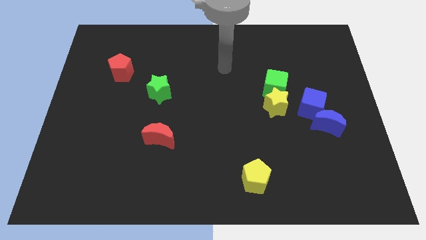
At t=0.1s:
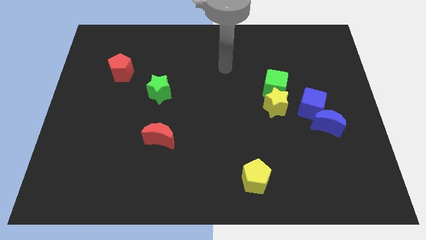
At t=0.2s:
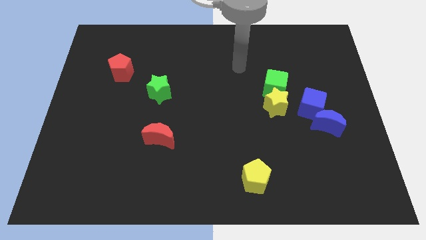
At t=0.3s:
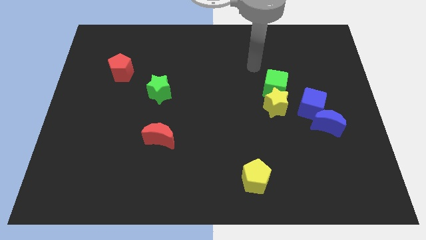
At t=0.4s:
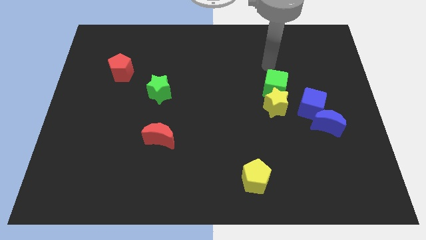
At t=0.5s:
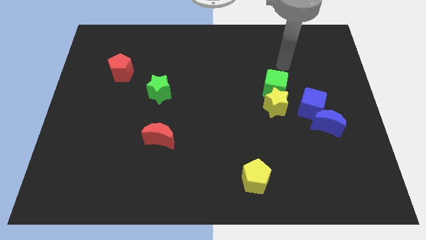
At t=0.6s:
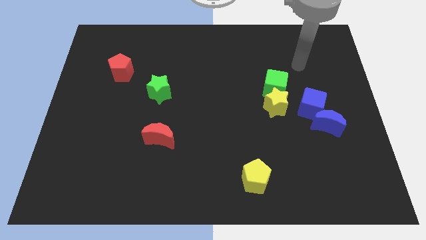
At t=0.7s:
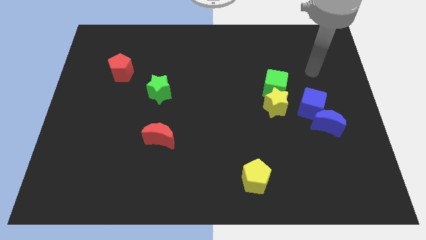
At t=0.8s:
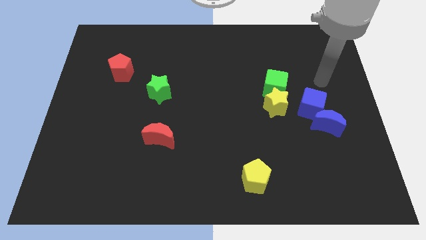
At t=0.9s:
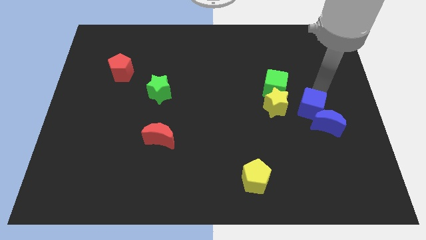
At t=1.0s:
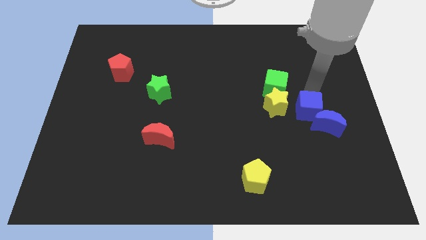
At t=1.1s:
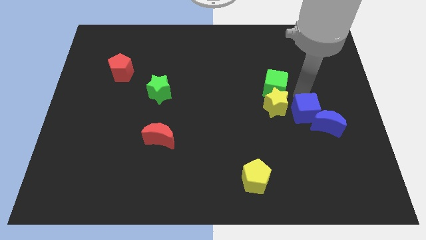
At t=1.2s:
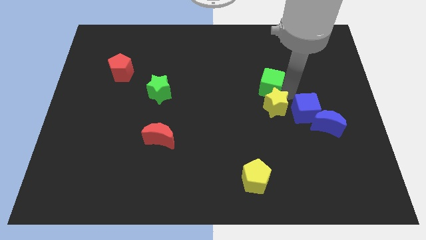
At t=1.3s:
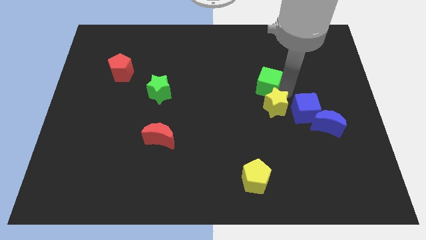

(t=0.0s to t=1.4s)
slightly push the blue cube

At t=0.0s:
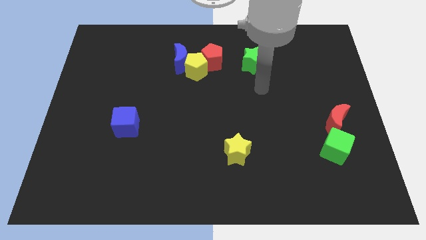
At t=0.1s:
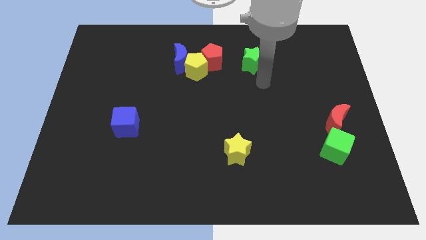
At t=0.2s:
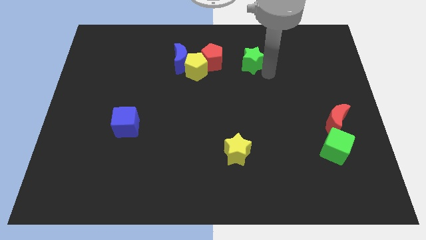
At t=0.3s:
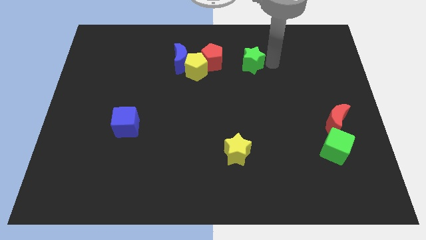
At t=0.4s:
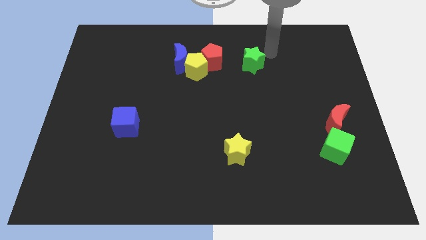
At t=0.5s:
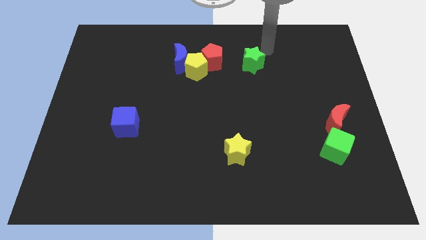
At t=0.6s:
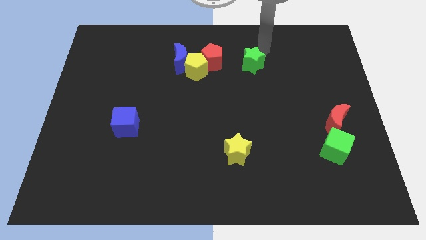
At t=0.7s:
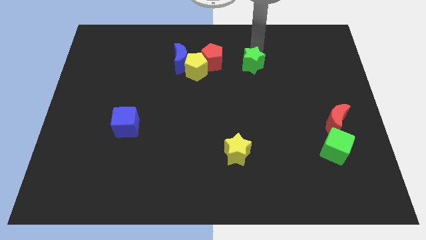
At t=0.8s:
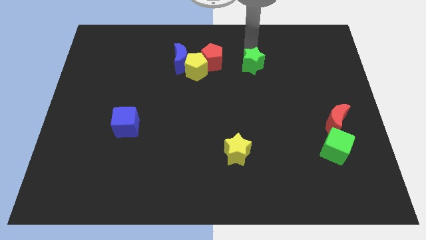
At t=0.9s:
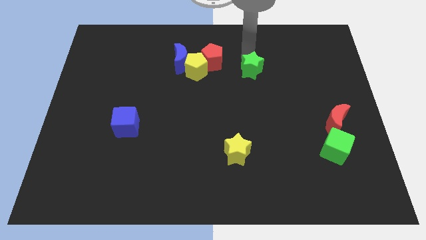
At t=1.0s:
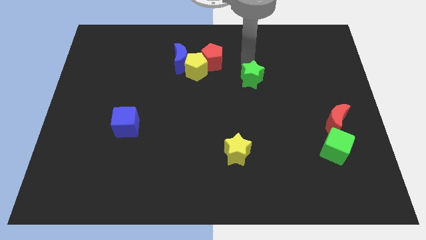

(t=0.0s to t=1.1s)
push the green star slightly to the bottom

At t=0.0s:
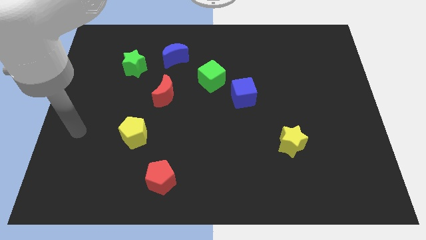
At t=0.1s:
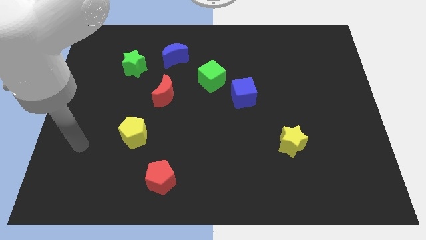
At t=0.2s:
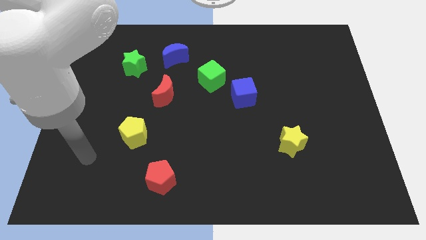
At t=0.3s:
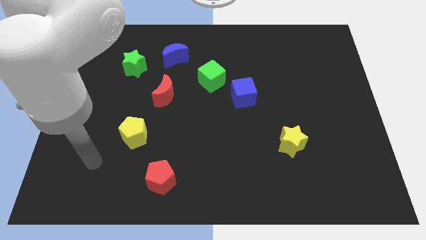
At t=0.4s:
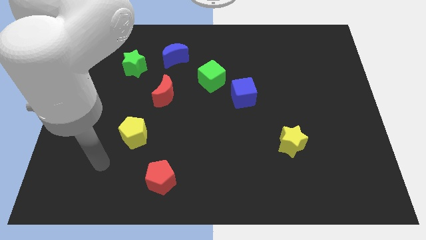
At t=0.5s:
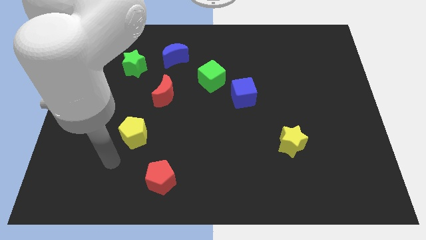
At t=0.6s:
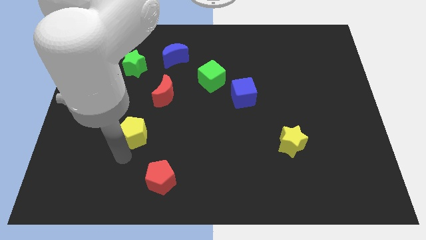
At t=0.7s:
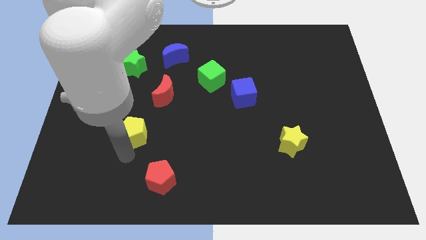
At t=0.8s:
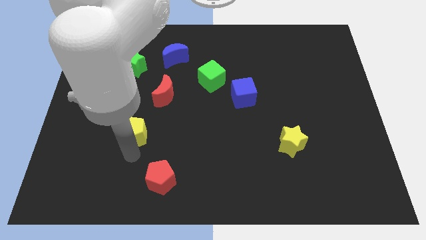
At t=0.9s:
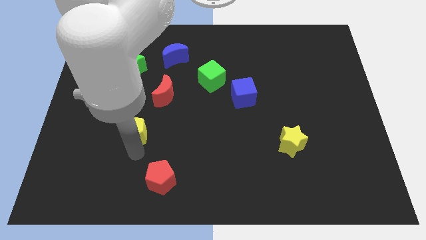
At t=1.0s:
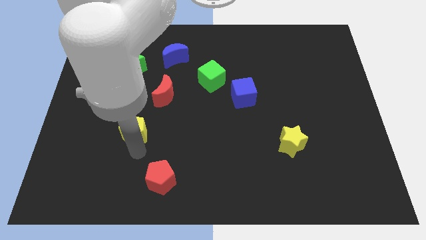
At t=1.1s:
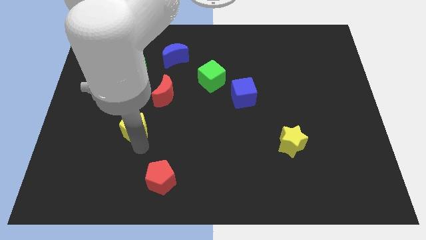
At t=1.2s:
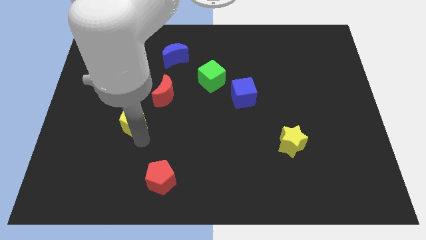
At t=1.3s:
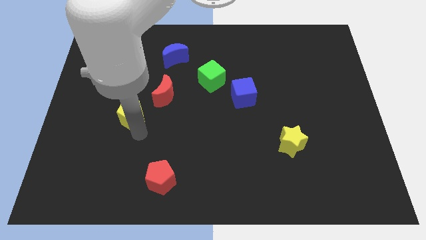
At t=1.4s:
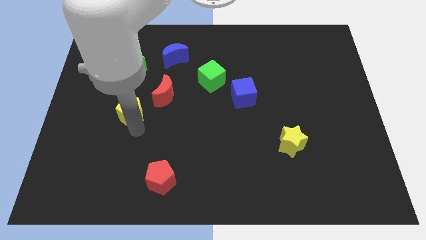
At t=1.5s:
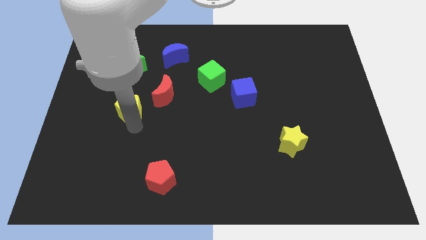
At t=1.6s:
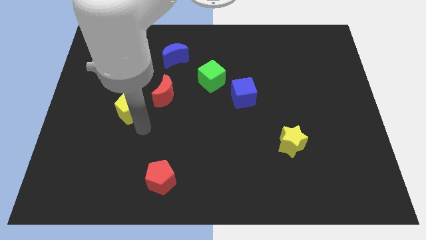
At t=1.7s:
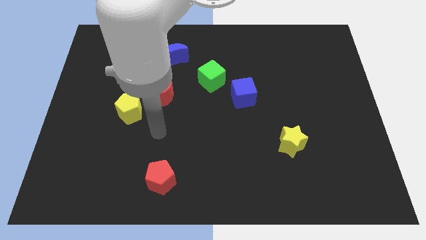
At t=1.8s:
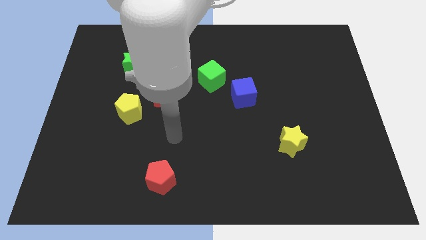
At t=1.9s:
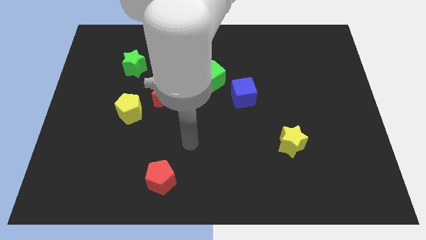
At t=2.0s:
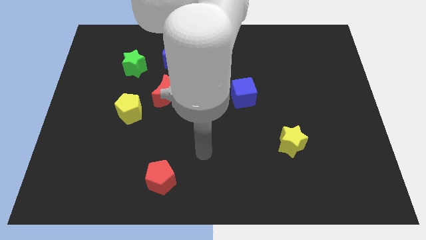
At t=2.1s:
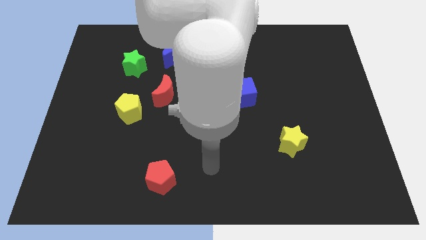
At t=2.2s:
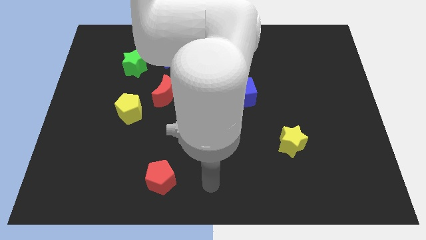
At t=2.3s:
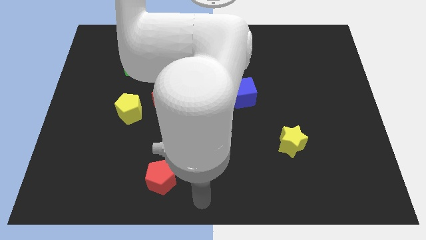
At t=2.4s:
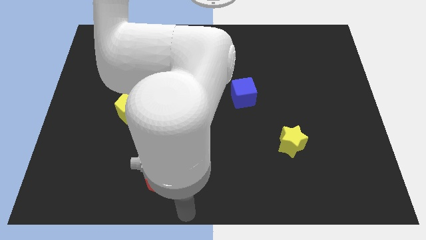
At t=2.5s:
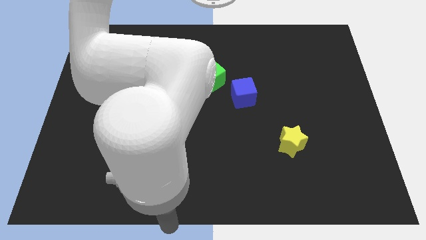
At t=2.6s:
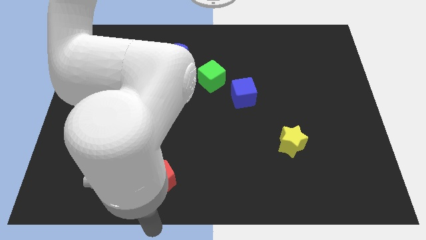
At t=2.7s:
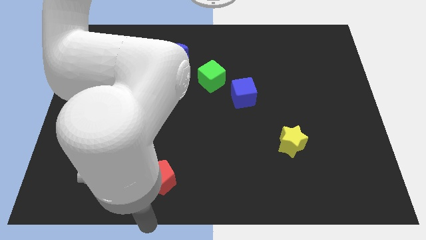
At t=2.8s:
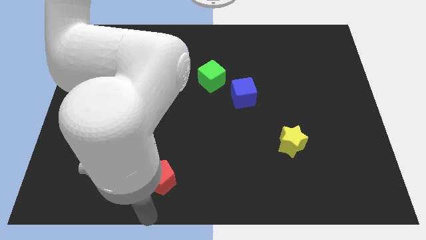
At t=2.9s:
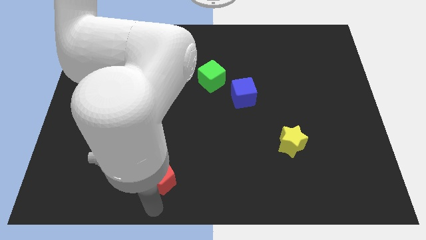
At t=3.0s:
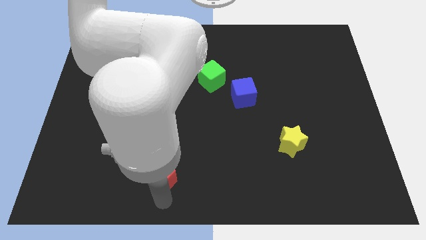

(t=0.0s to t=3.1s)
push the yellow pentagon towards the red moon

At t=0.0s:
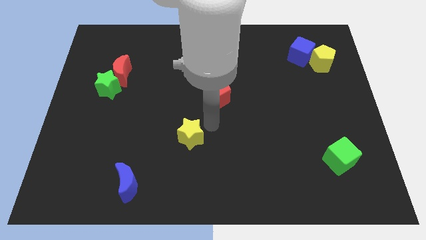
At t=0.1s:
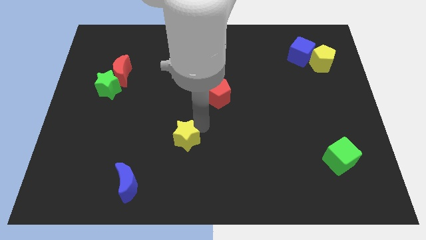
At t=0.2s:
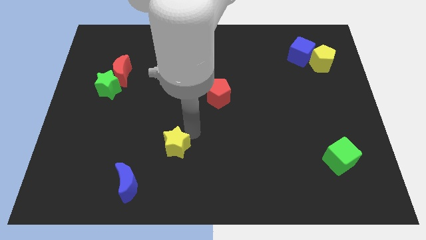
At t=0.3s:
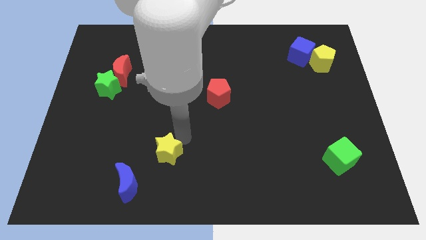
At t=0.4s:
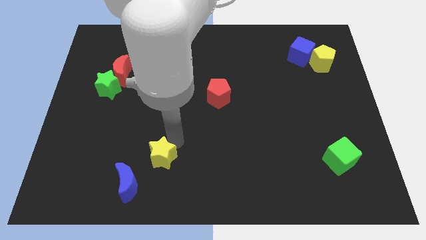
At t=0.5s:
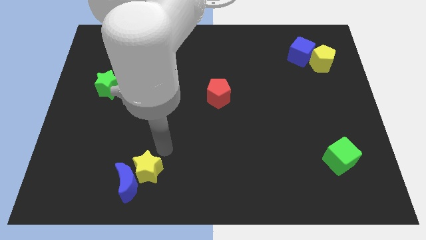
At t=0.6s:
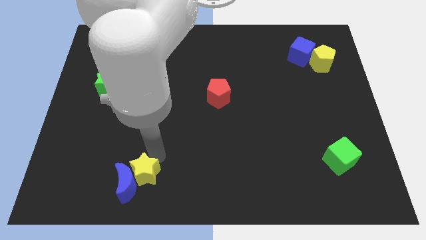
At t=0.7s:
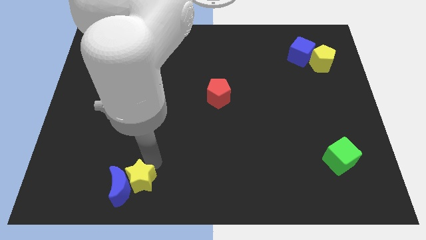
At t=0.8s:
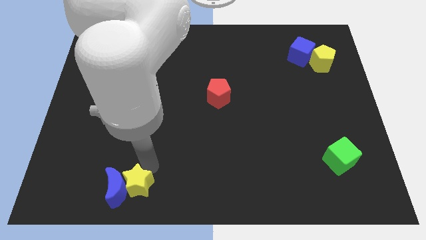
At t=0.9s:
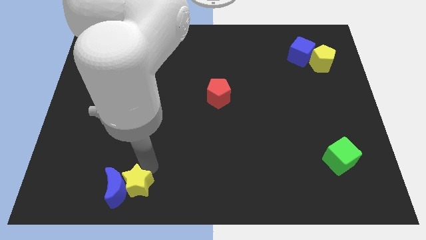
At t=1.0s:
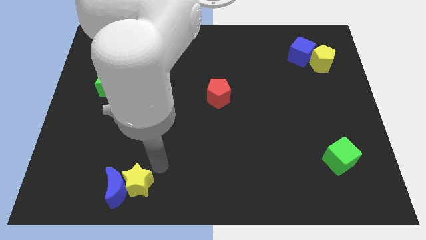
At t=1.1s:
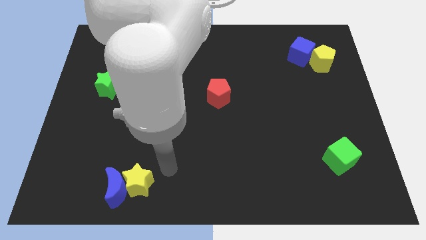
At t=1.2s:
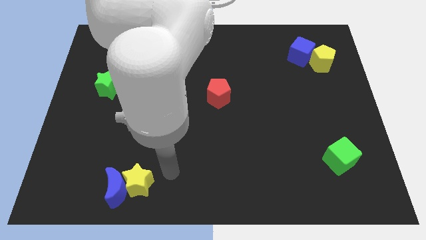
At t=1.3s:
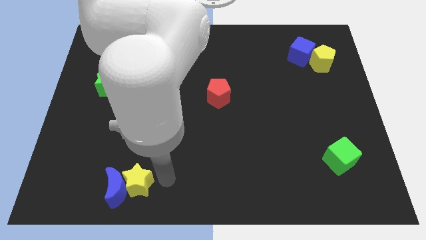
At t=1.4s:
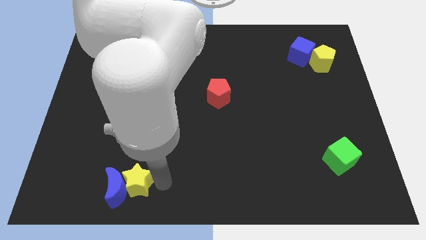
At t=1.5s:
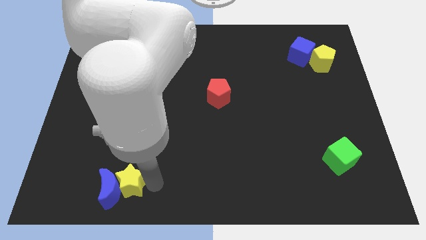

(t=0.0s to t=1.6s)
push yellow star into blue moon

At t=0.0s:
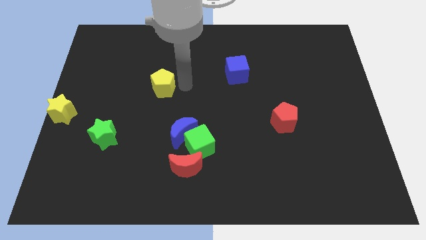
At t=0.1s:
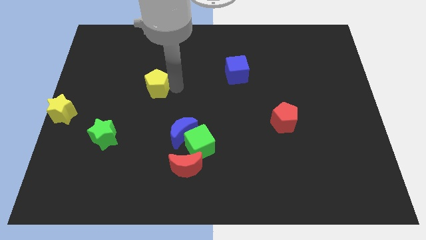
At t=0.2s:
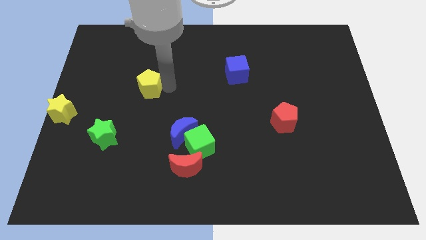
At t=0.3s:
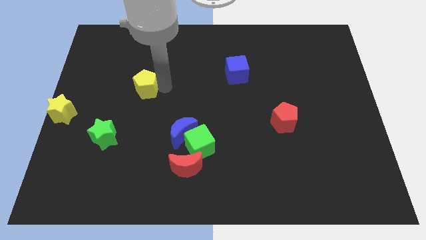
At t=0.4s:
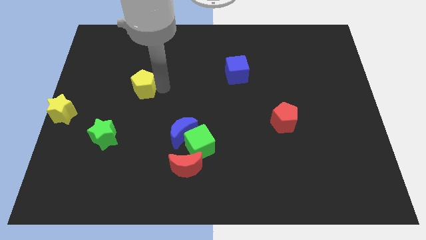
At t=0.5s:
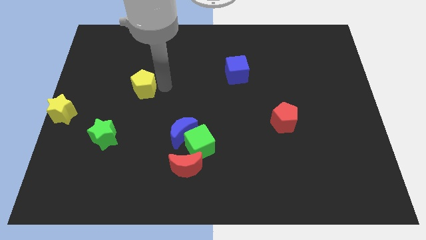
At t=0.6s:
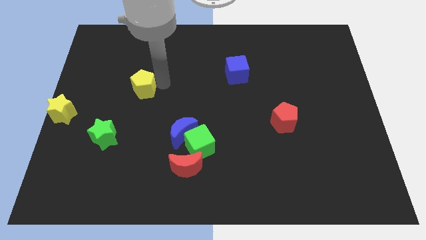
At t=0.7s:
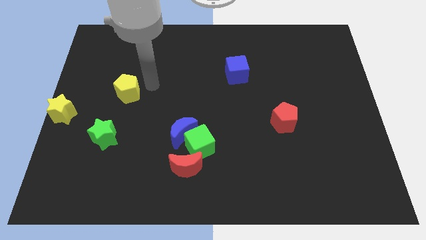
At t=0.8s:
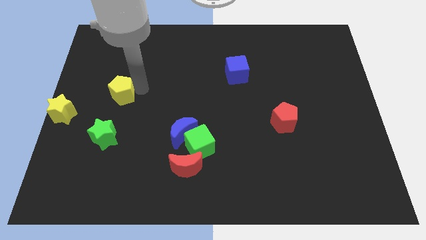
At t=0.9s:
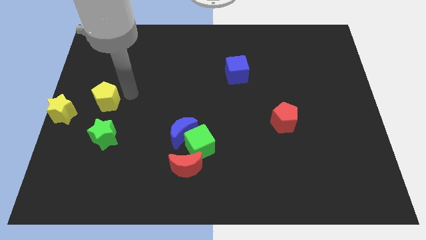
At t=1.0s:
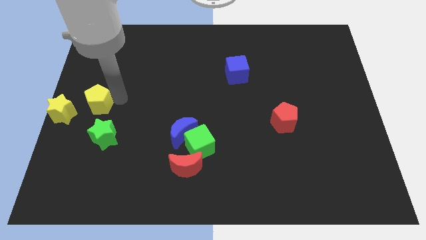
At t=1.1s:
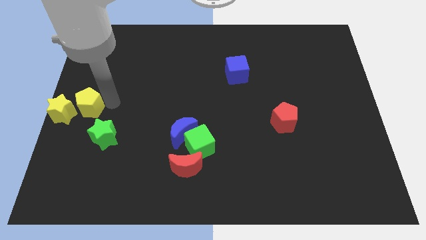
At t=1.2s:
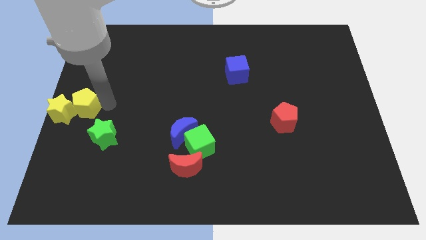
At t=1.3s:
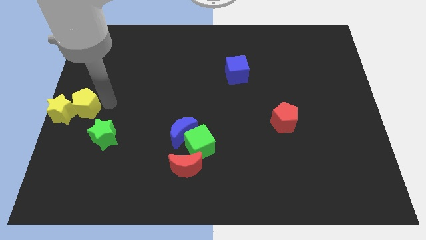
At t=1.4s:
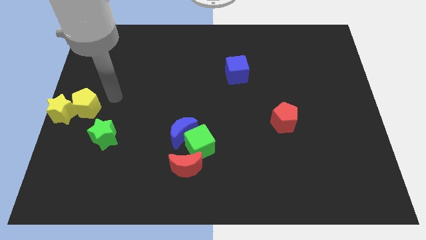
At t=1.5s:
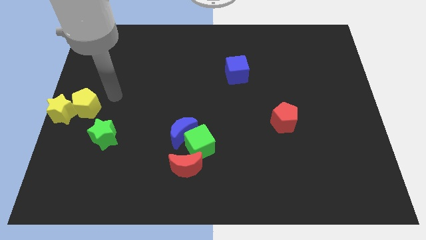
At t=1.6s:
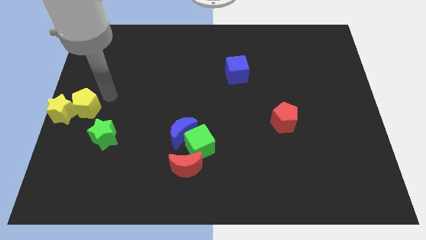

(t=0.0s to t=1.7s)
move the yellow pentagon close to the yellow star

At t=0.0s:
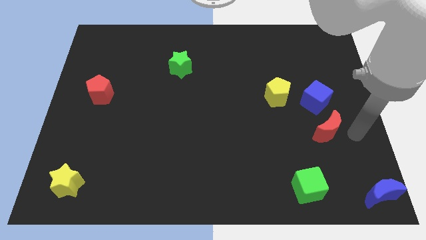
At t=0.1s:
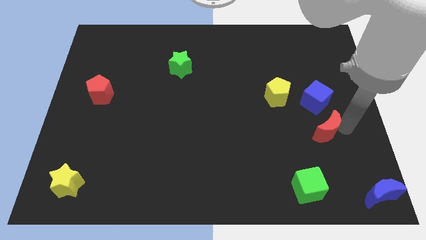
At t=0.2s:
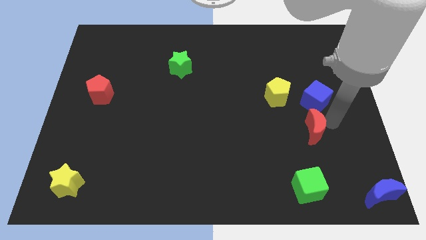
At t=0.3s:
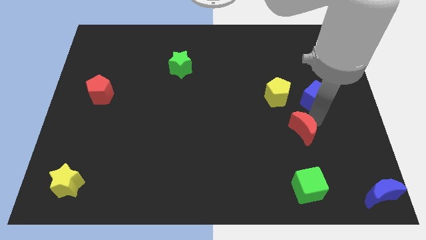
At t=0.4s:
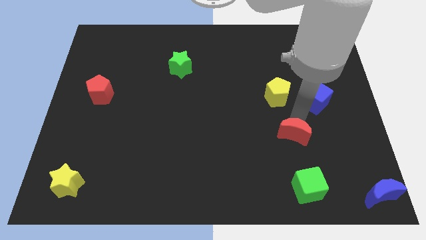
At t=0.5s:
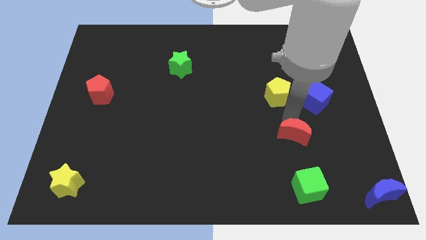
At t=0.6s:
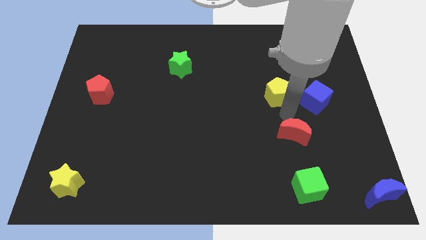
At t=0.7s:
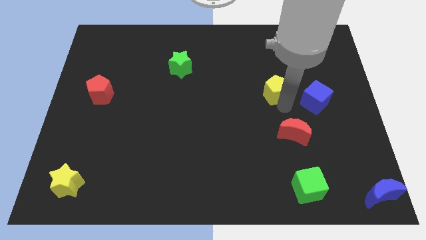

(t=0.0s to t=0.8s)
move the red crescent vertically to the top of the green cube
